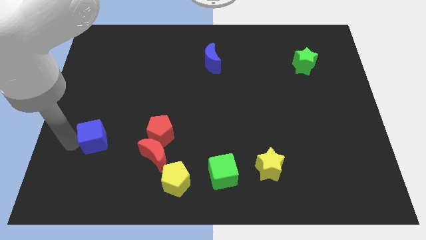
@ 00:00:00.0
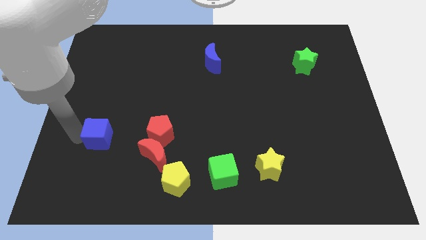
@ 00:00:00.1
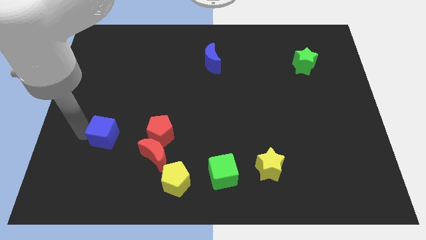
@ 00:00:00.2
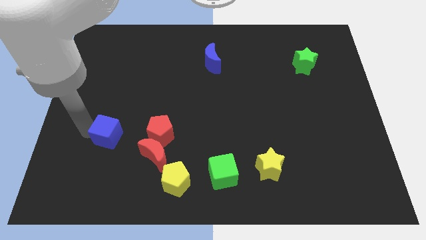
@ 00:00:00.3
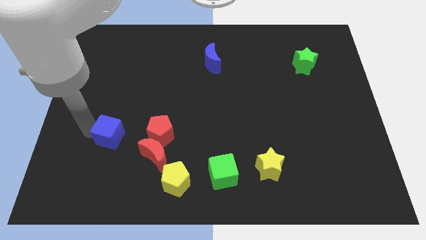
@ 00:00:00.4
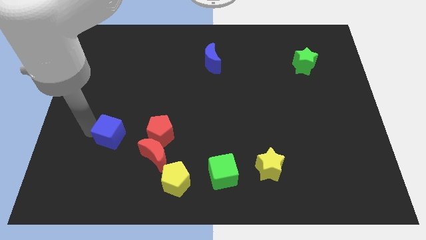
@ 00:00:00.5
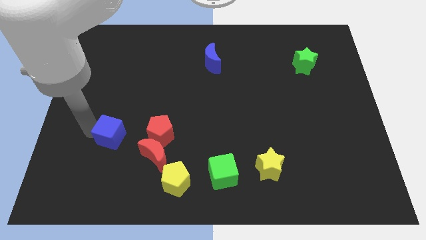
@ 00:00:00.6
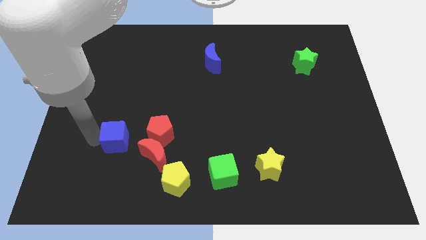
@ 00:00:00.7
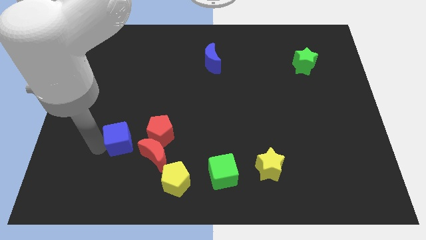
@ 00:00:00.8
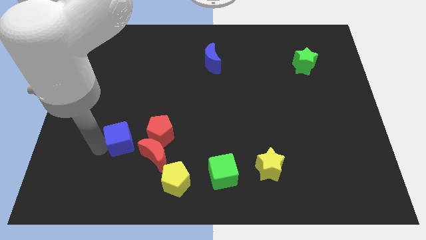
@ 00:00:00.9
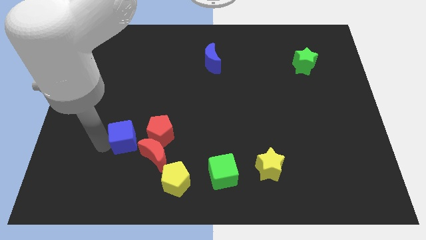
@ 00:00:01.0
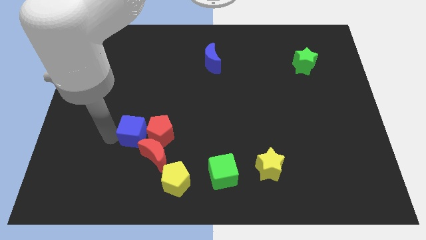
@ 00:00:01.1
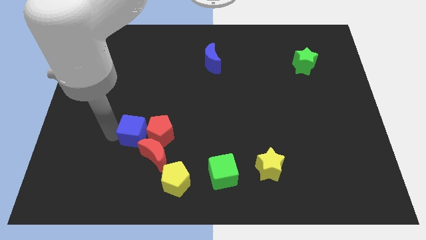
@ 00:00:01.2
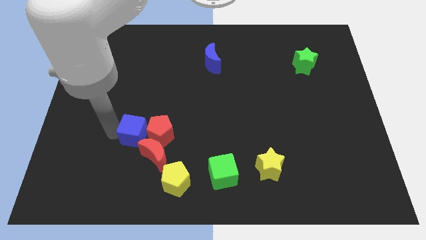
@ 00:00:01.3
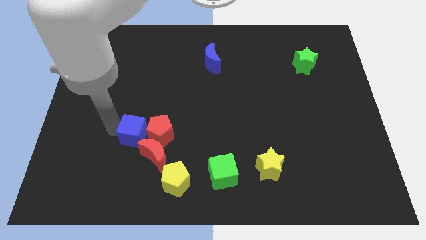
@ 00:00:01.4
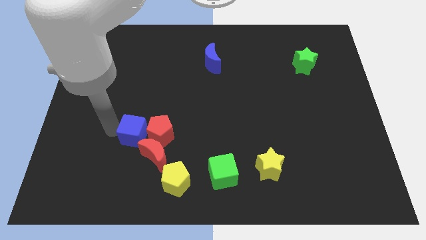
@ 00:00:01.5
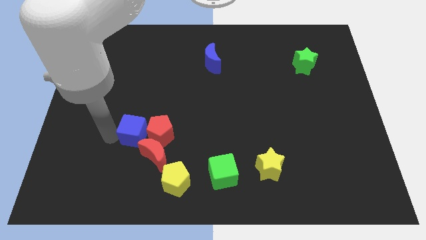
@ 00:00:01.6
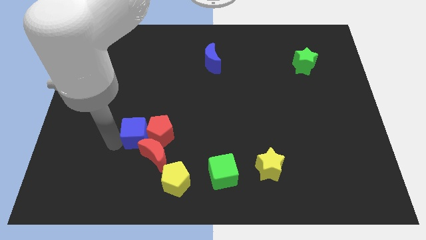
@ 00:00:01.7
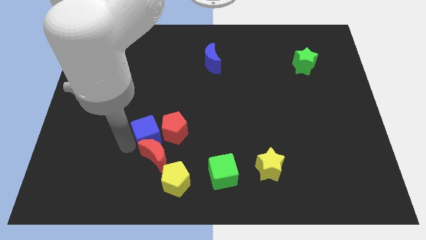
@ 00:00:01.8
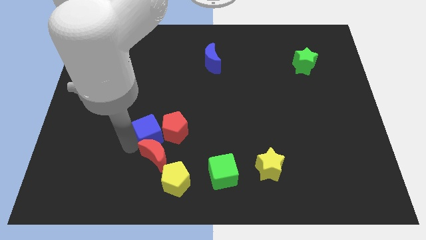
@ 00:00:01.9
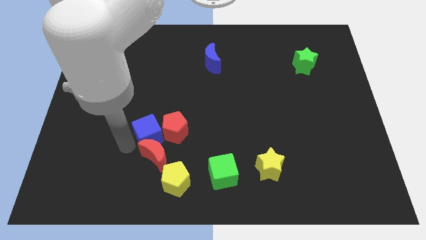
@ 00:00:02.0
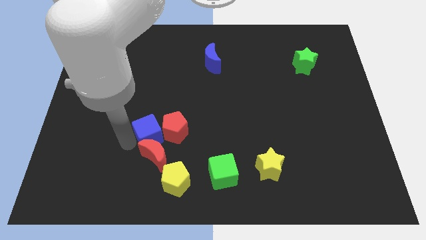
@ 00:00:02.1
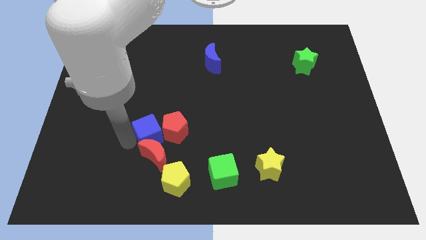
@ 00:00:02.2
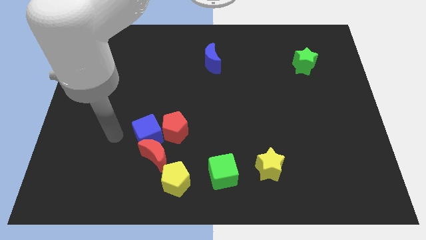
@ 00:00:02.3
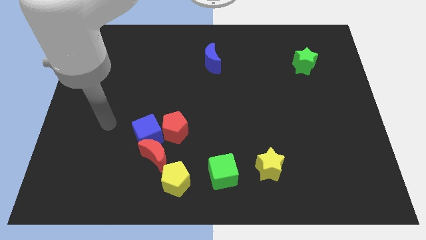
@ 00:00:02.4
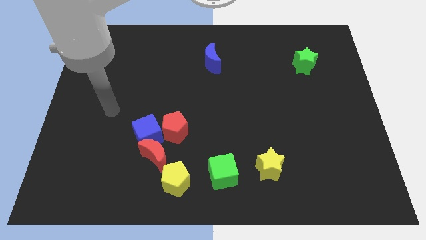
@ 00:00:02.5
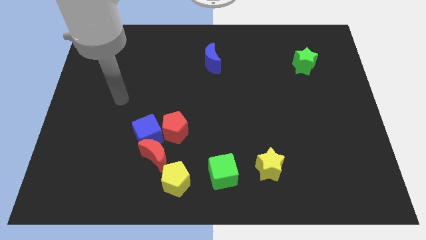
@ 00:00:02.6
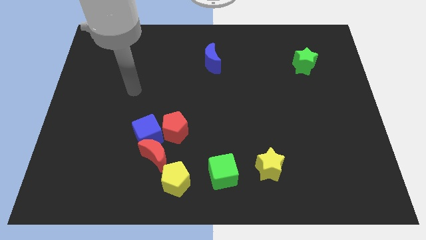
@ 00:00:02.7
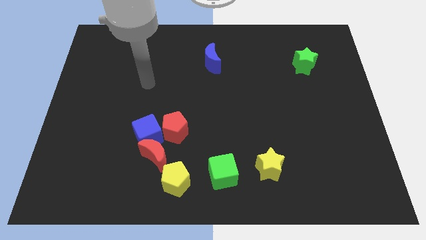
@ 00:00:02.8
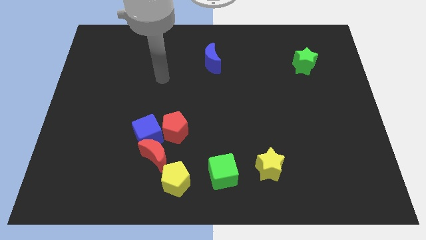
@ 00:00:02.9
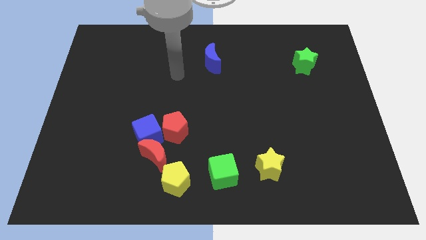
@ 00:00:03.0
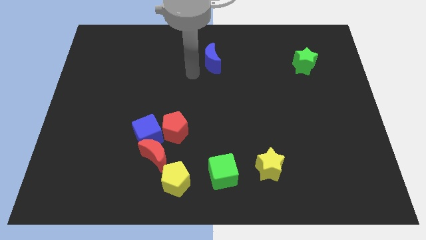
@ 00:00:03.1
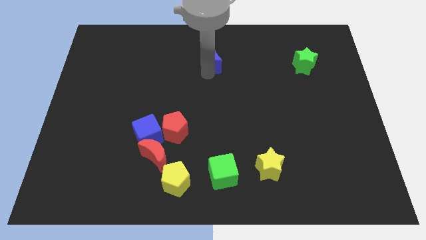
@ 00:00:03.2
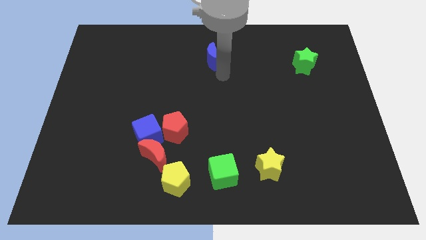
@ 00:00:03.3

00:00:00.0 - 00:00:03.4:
push the blue cube into the red pentagon

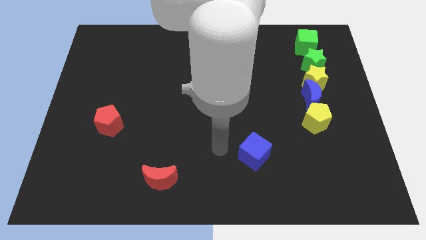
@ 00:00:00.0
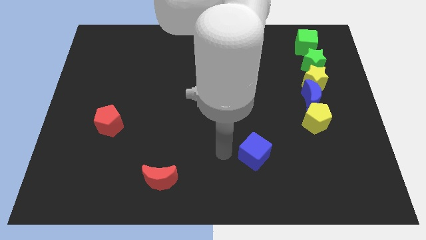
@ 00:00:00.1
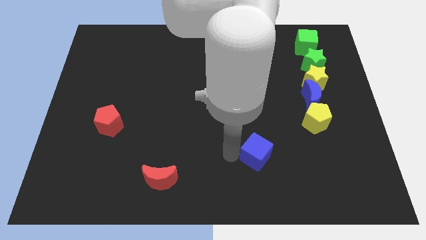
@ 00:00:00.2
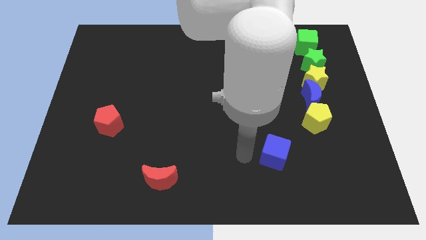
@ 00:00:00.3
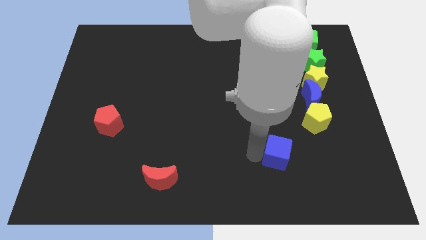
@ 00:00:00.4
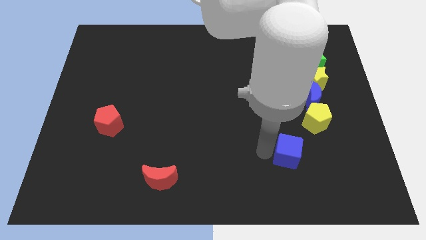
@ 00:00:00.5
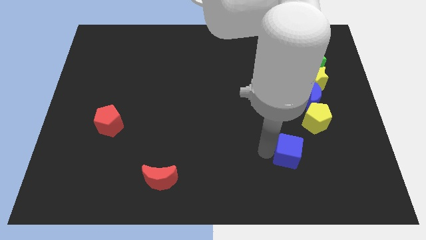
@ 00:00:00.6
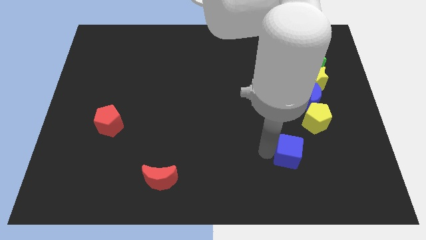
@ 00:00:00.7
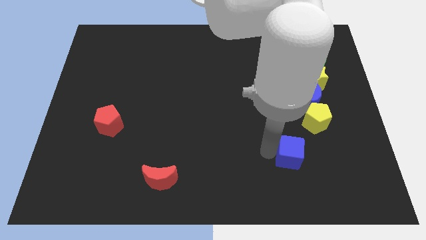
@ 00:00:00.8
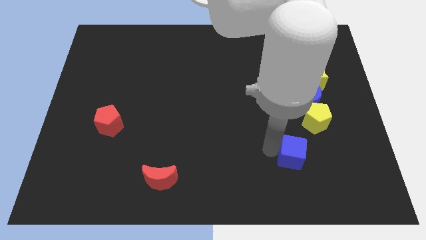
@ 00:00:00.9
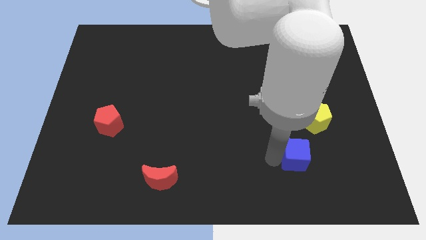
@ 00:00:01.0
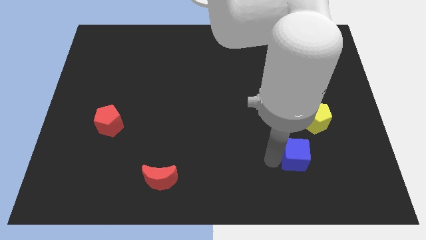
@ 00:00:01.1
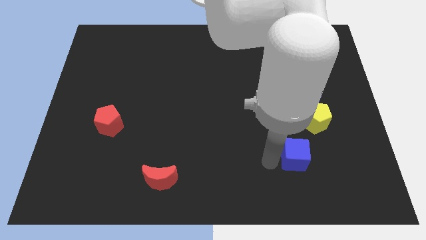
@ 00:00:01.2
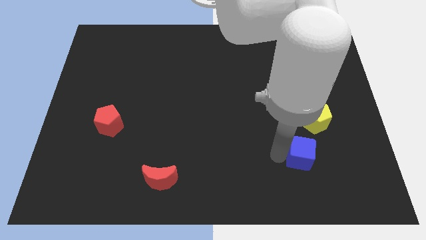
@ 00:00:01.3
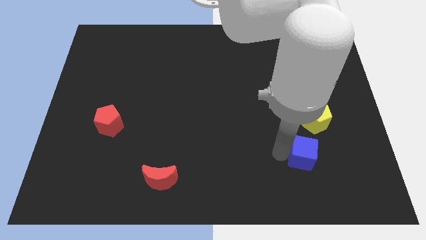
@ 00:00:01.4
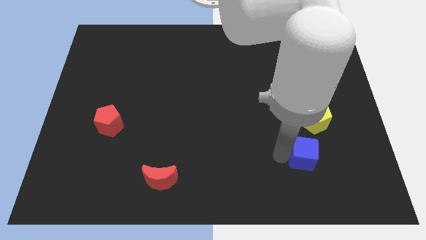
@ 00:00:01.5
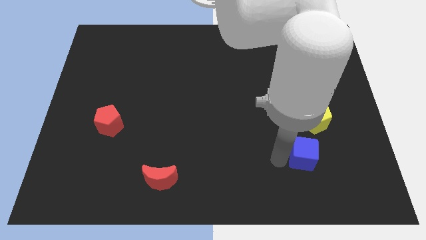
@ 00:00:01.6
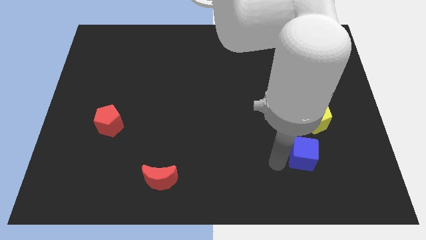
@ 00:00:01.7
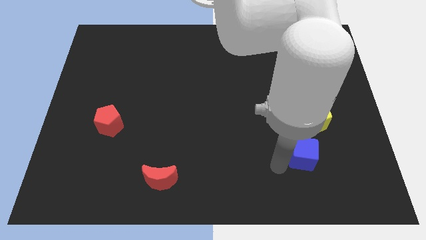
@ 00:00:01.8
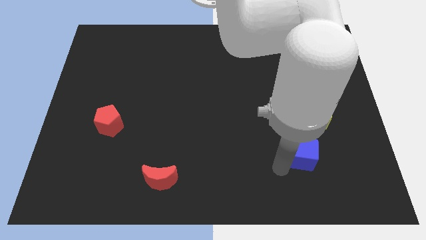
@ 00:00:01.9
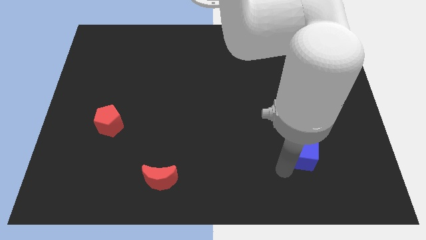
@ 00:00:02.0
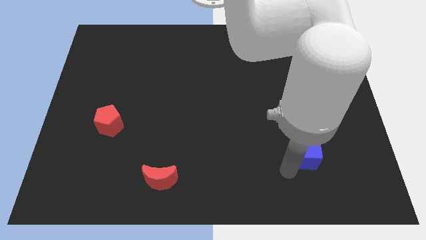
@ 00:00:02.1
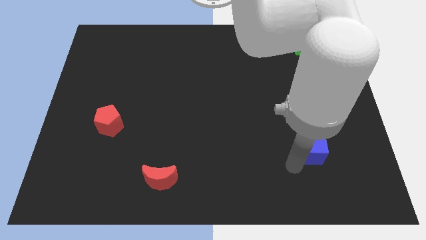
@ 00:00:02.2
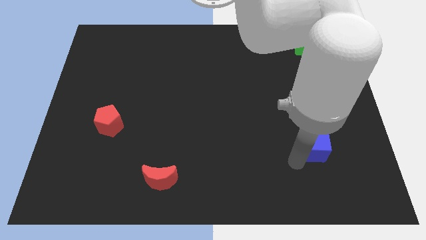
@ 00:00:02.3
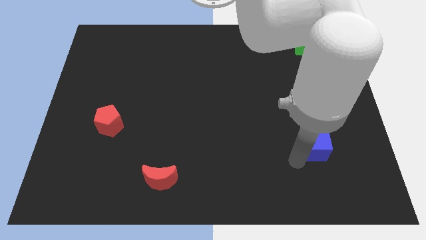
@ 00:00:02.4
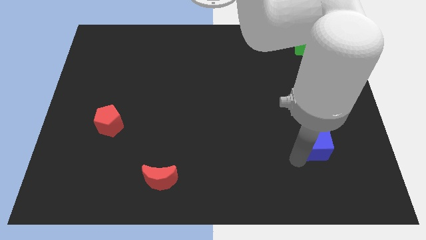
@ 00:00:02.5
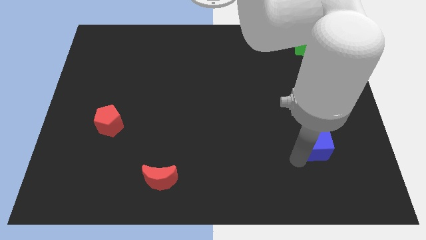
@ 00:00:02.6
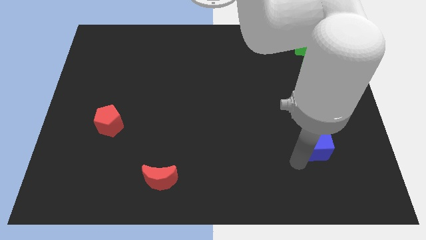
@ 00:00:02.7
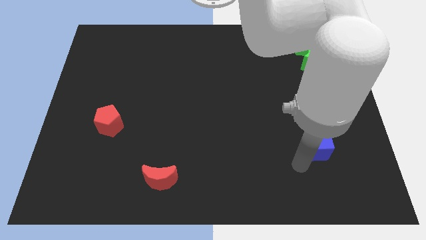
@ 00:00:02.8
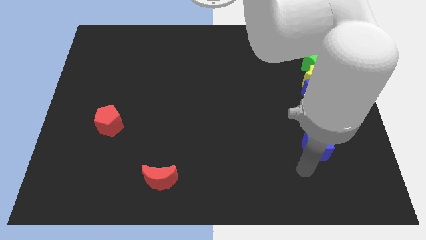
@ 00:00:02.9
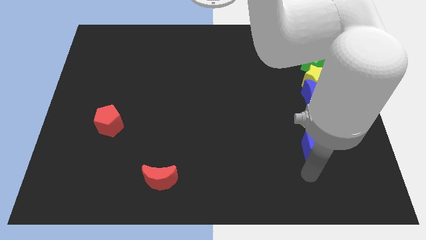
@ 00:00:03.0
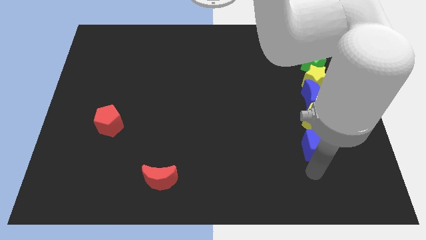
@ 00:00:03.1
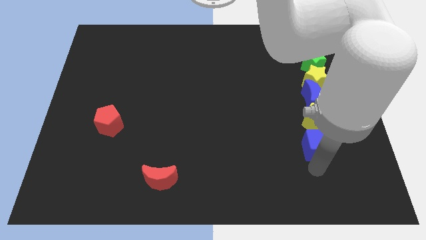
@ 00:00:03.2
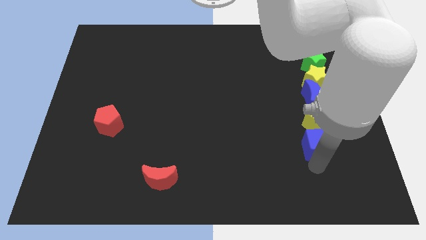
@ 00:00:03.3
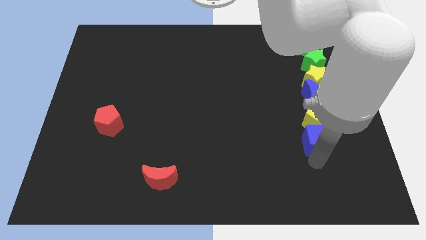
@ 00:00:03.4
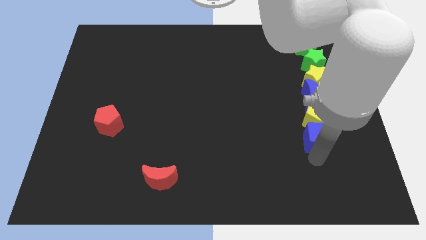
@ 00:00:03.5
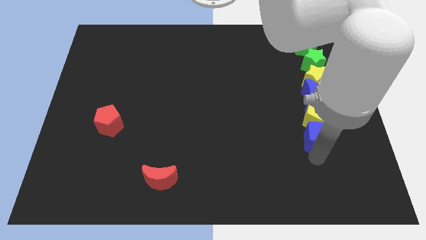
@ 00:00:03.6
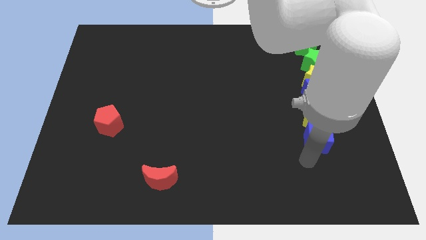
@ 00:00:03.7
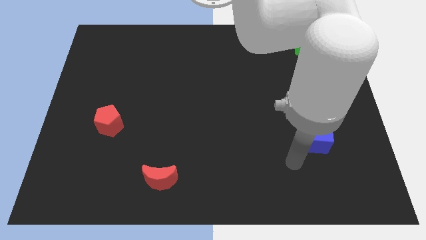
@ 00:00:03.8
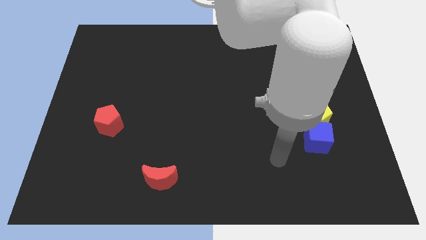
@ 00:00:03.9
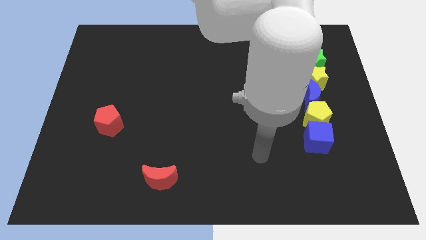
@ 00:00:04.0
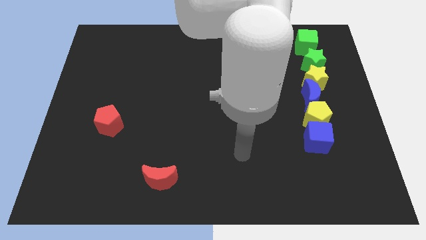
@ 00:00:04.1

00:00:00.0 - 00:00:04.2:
move the blue cube close to the bottom of the yellow pentagon

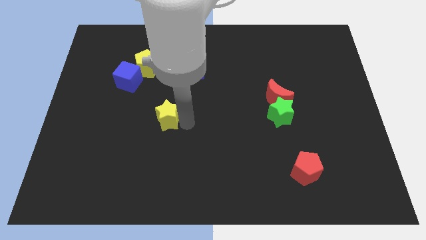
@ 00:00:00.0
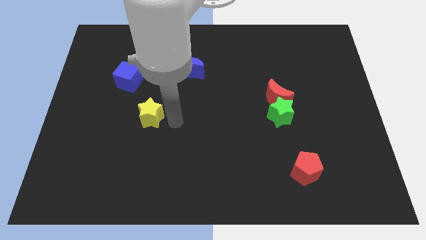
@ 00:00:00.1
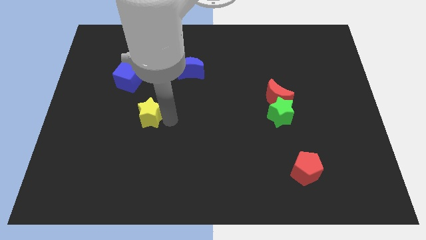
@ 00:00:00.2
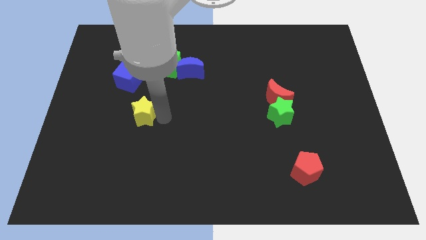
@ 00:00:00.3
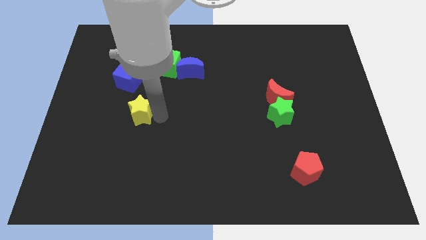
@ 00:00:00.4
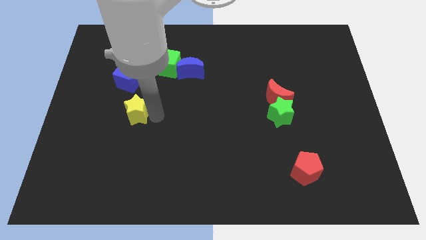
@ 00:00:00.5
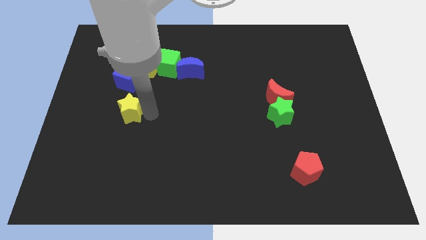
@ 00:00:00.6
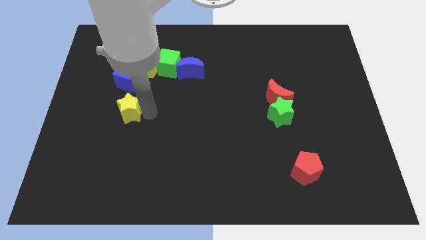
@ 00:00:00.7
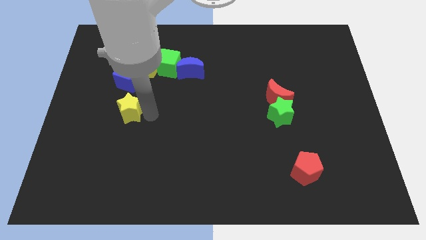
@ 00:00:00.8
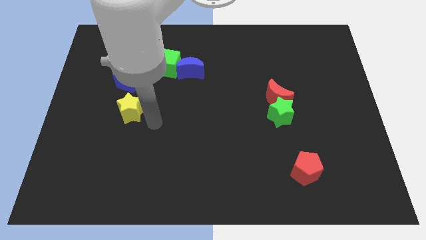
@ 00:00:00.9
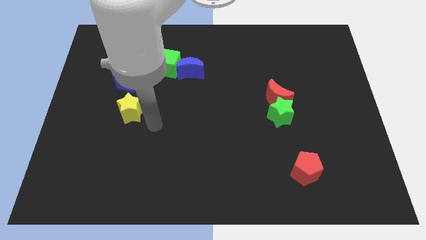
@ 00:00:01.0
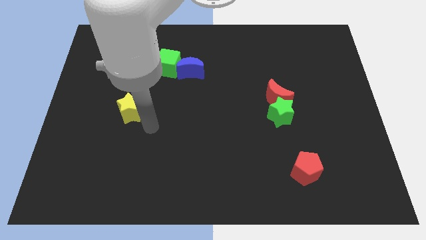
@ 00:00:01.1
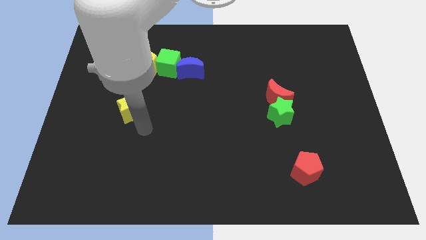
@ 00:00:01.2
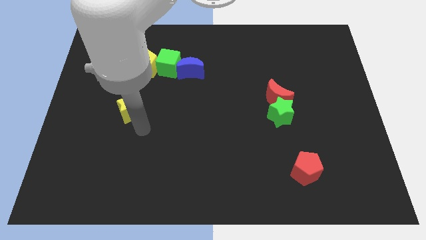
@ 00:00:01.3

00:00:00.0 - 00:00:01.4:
move the yellow star close to the blue cube
